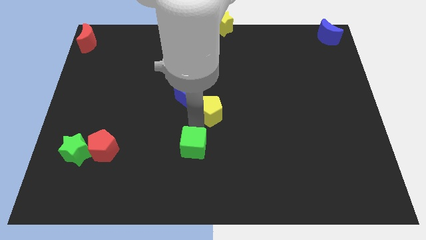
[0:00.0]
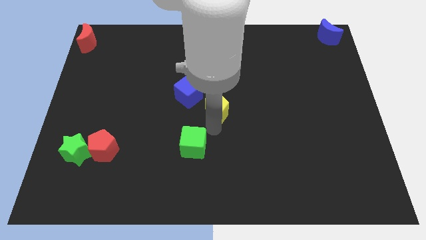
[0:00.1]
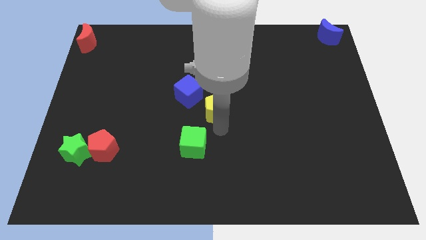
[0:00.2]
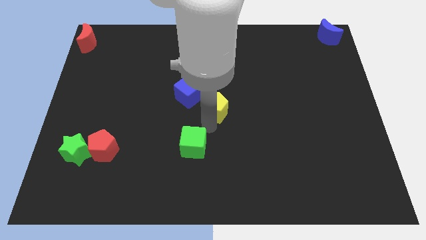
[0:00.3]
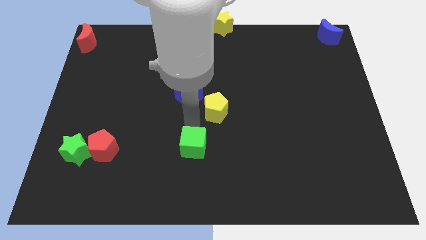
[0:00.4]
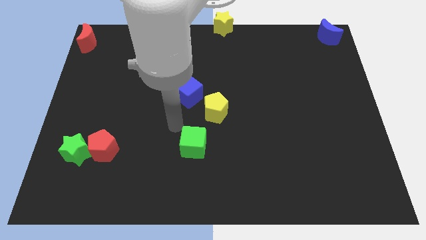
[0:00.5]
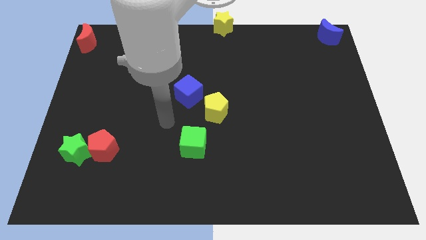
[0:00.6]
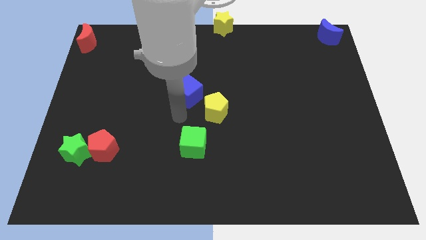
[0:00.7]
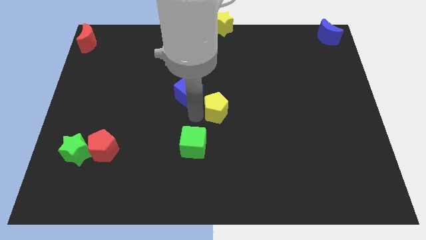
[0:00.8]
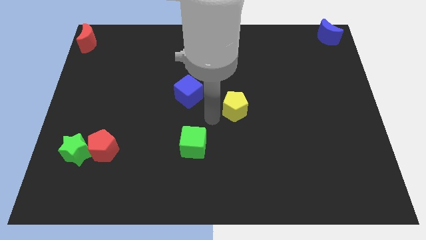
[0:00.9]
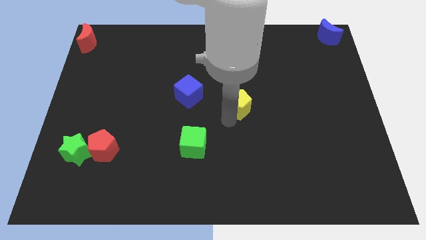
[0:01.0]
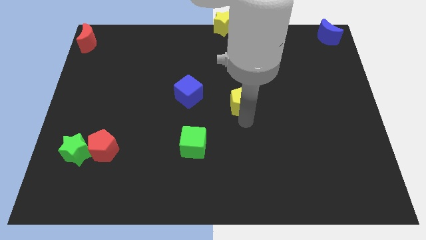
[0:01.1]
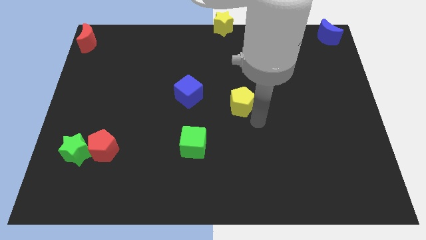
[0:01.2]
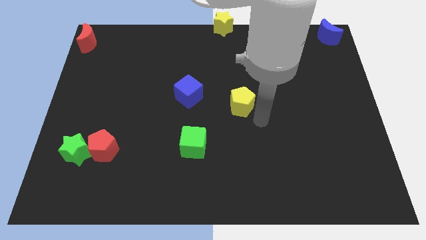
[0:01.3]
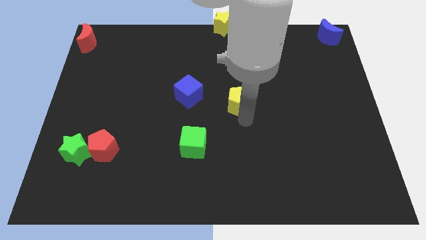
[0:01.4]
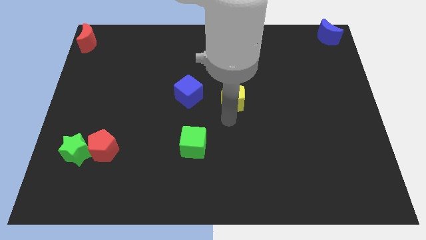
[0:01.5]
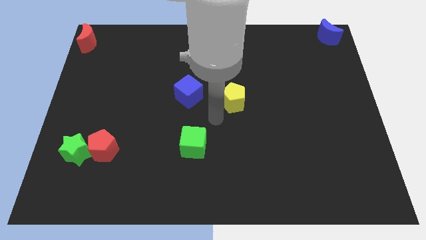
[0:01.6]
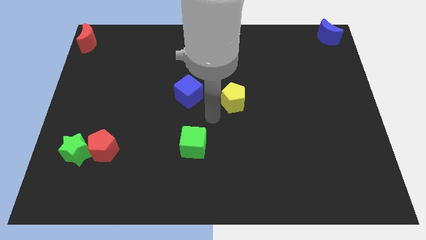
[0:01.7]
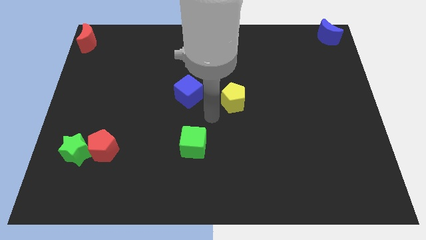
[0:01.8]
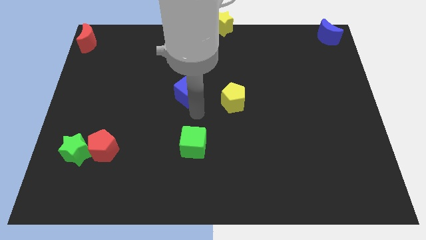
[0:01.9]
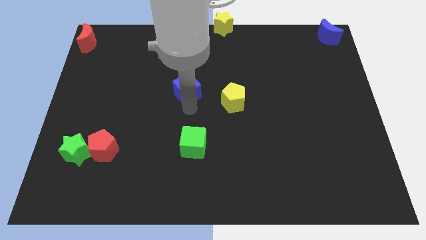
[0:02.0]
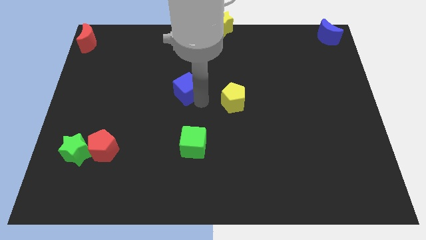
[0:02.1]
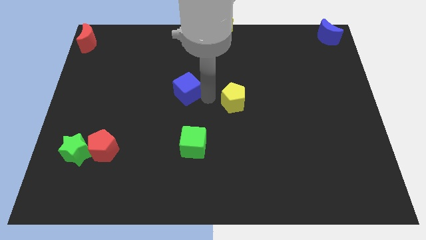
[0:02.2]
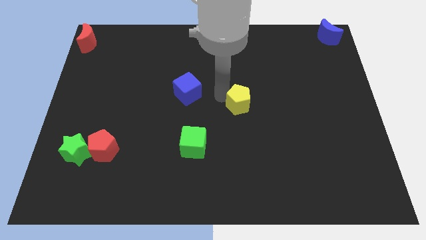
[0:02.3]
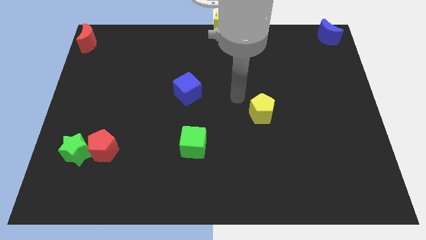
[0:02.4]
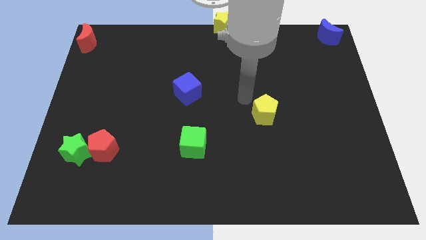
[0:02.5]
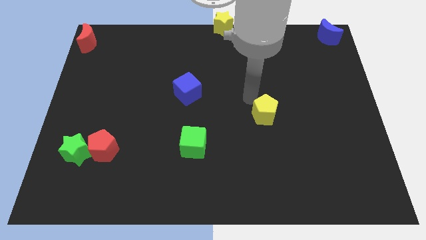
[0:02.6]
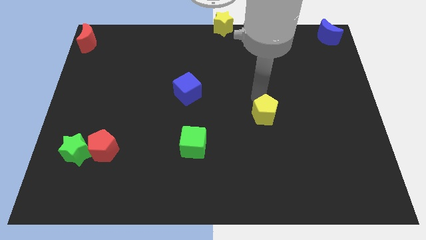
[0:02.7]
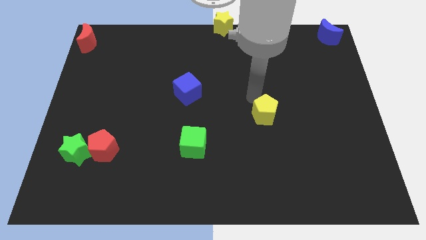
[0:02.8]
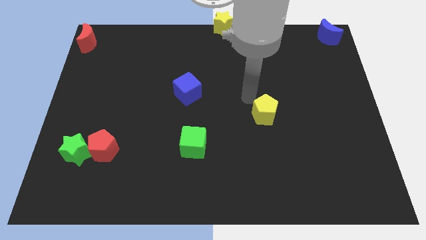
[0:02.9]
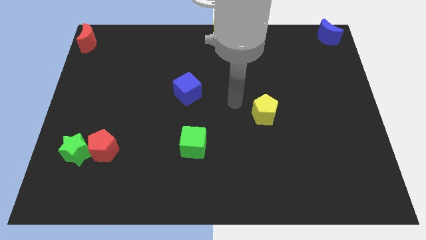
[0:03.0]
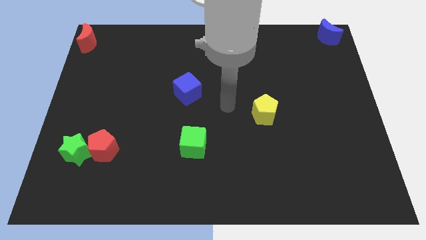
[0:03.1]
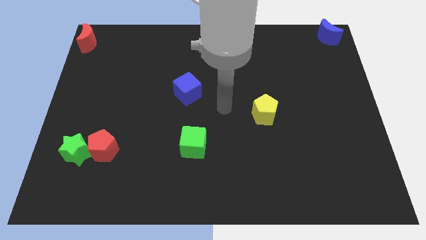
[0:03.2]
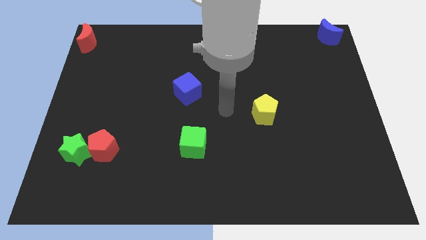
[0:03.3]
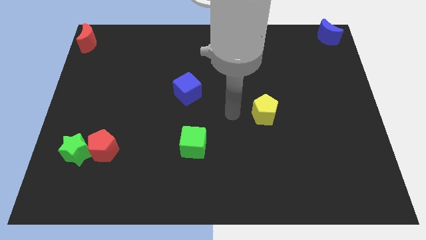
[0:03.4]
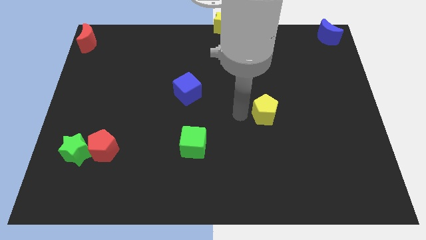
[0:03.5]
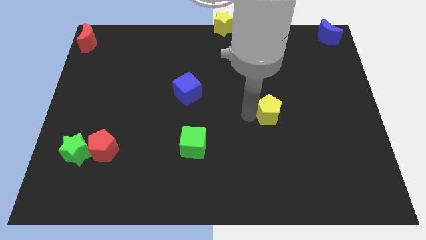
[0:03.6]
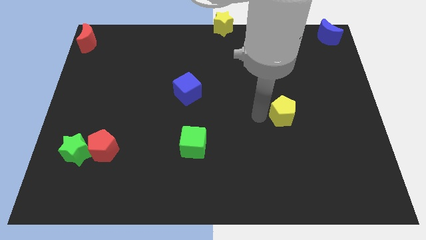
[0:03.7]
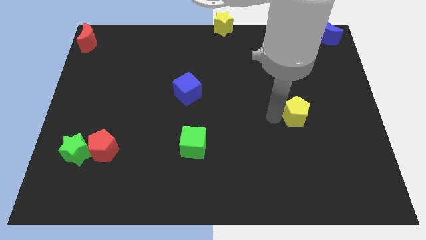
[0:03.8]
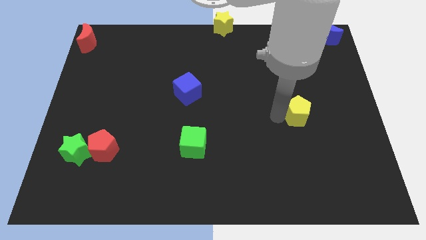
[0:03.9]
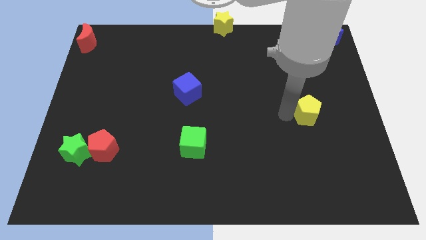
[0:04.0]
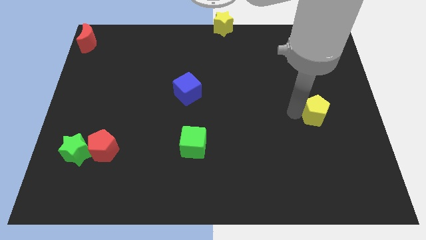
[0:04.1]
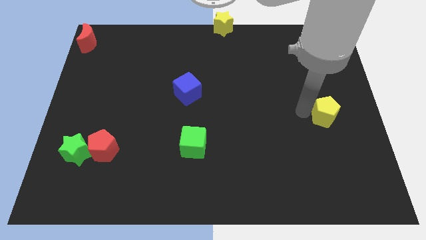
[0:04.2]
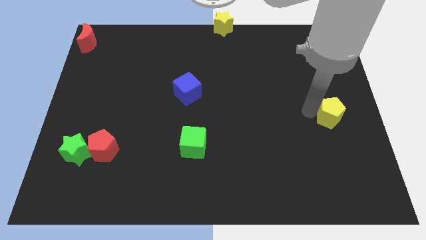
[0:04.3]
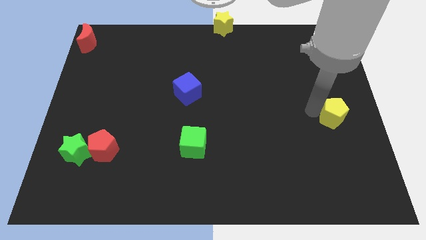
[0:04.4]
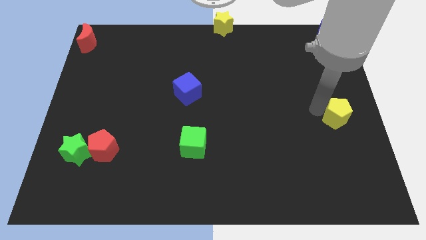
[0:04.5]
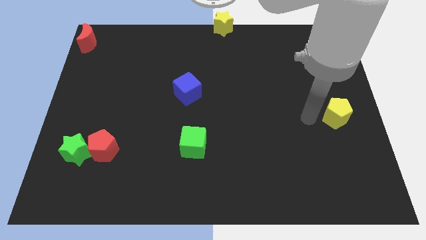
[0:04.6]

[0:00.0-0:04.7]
place the yellow pentagon below the blue moon

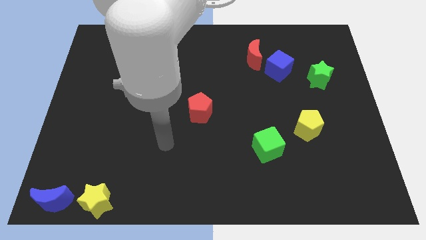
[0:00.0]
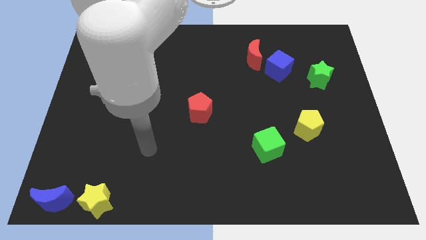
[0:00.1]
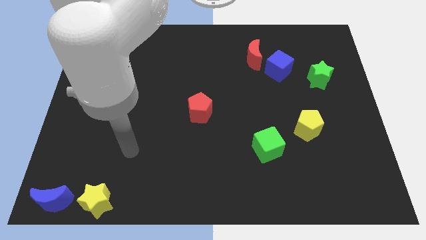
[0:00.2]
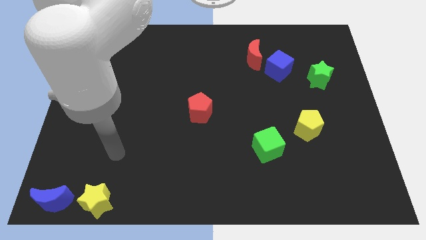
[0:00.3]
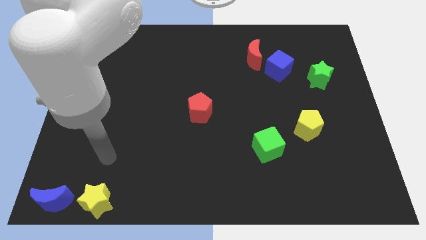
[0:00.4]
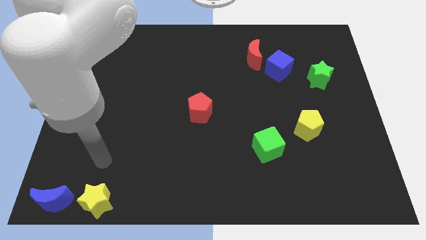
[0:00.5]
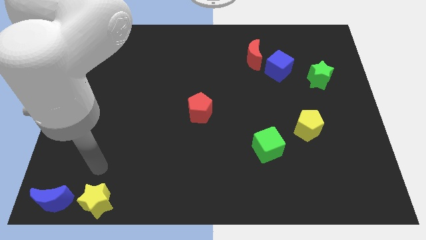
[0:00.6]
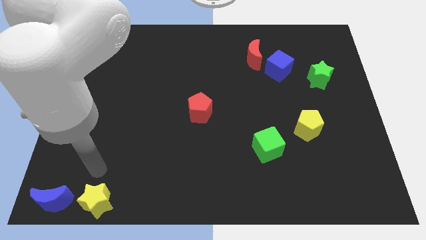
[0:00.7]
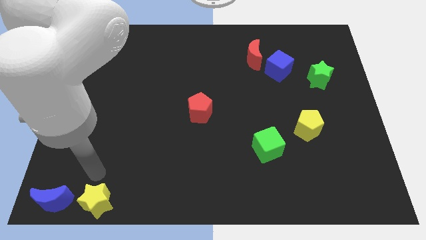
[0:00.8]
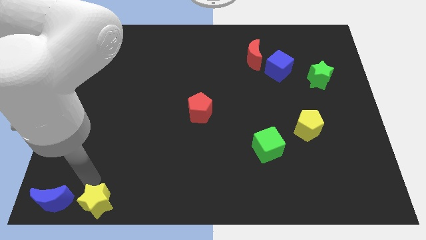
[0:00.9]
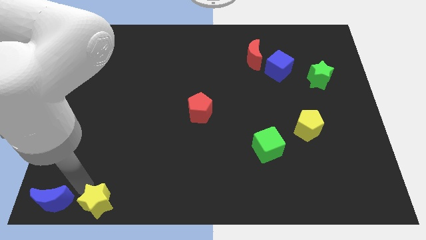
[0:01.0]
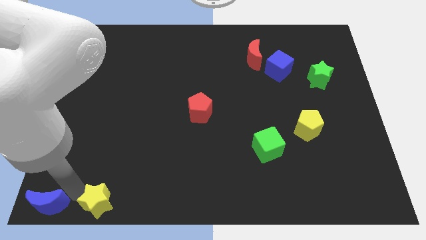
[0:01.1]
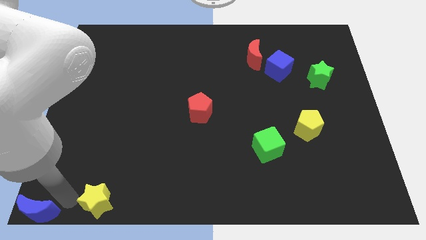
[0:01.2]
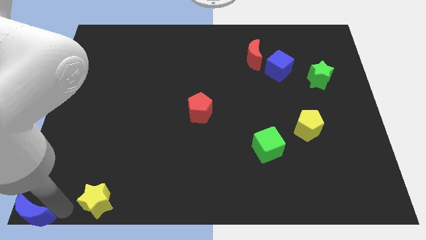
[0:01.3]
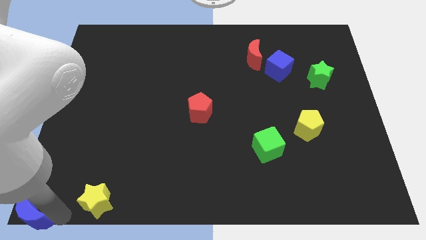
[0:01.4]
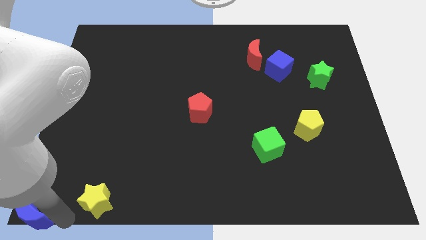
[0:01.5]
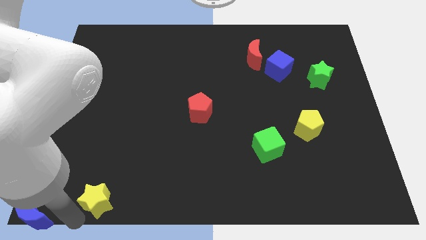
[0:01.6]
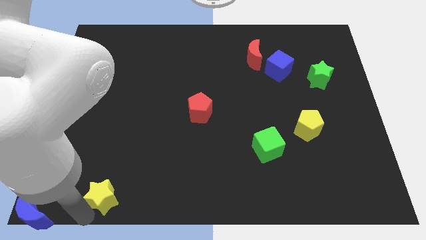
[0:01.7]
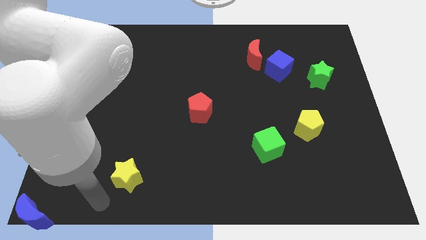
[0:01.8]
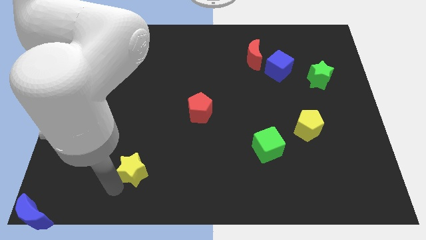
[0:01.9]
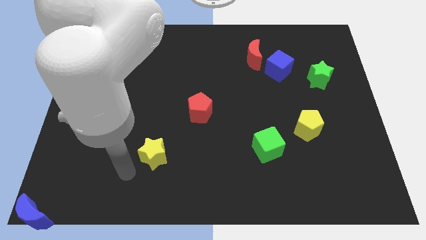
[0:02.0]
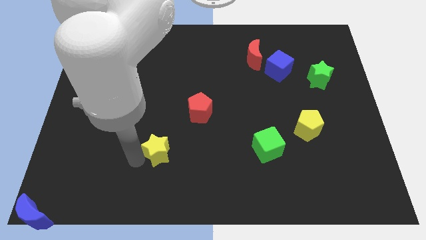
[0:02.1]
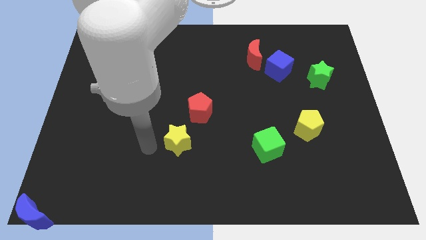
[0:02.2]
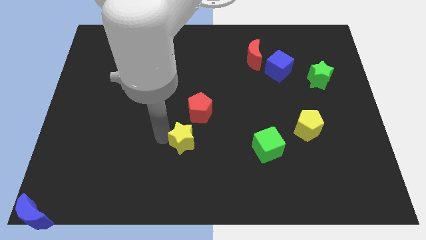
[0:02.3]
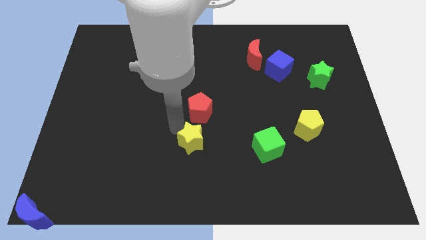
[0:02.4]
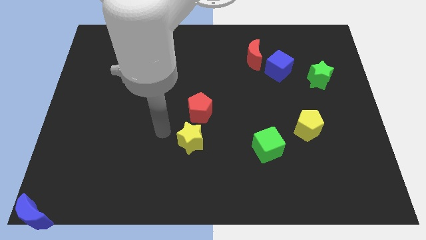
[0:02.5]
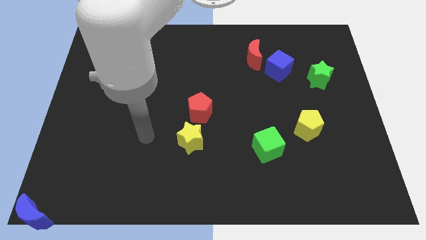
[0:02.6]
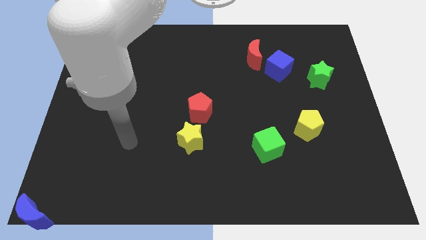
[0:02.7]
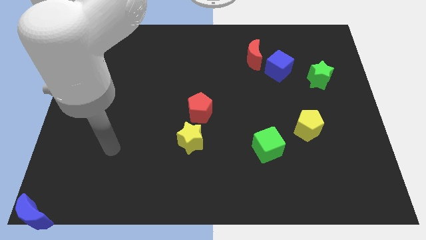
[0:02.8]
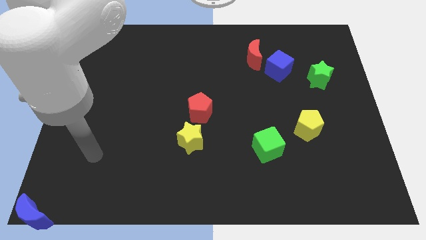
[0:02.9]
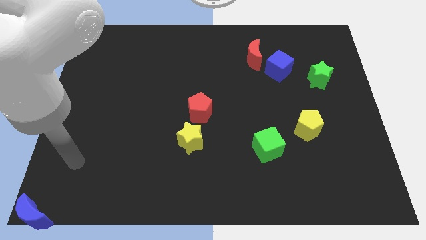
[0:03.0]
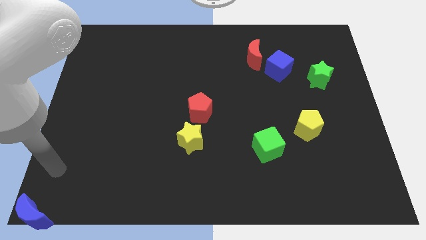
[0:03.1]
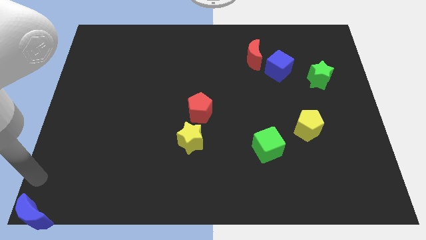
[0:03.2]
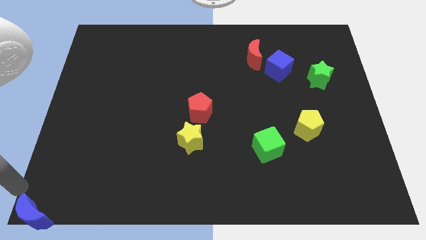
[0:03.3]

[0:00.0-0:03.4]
separate the yellow star from the blue crescent

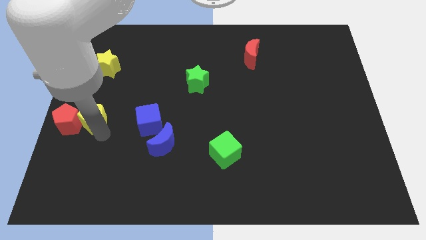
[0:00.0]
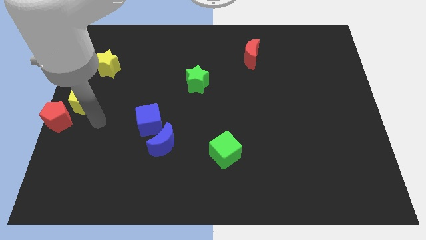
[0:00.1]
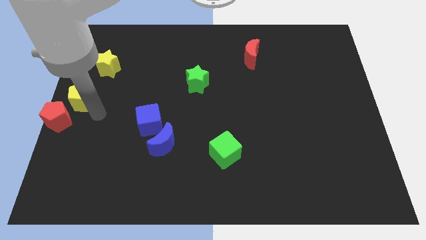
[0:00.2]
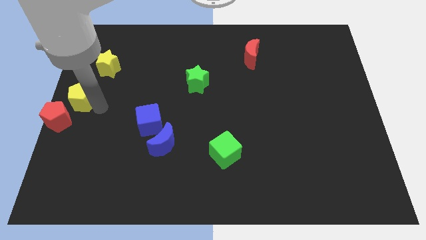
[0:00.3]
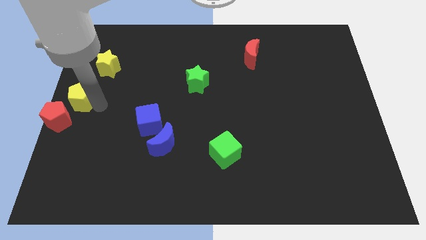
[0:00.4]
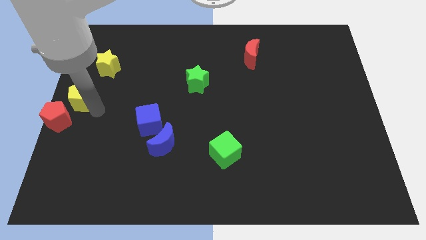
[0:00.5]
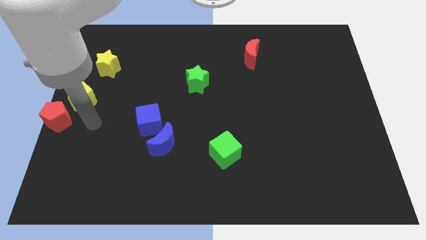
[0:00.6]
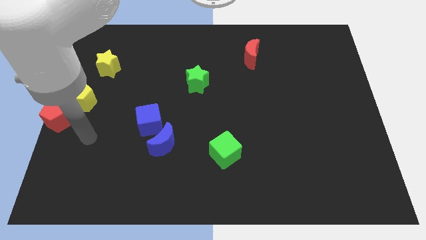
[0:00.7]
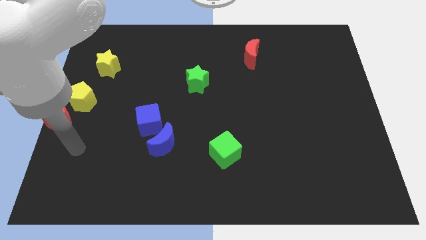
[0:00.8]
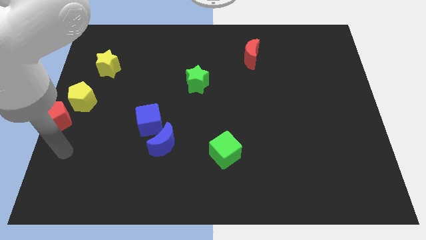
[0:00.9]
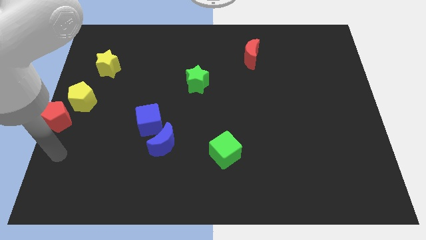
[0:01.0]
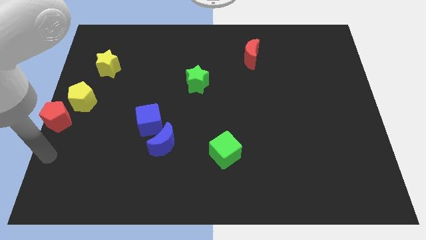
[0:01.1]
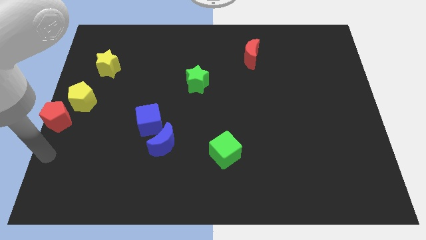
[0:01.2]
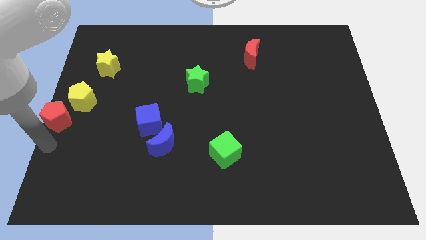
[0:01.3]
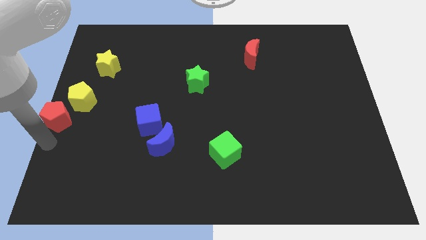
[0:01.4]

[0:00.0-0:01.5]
place the yellow pentagon diagonally in between the yellow star and red pentagon
